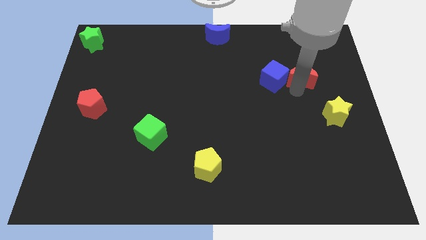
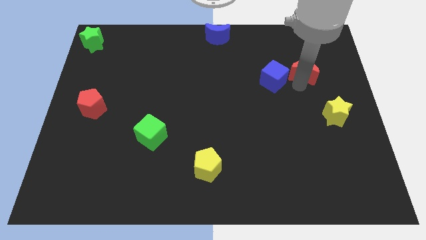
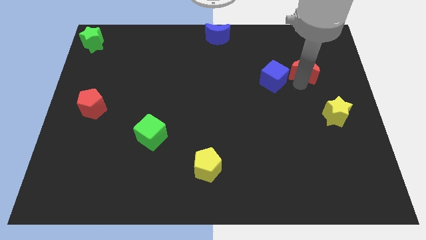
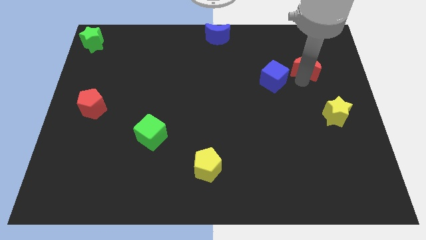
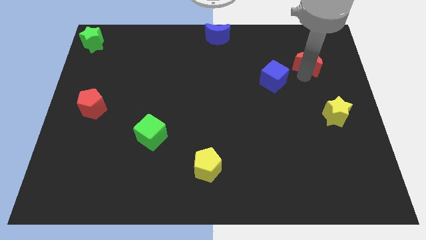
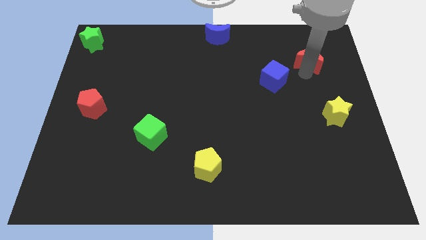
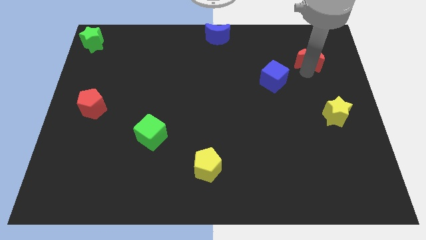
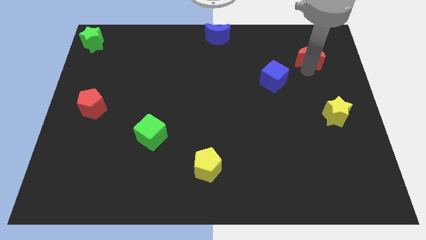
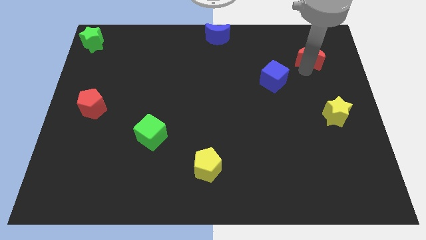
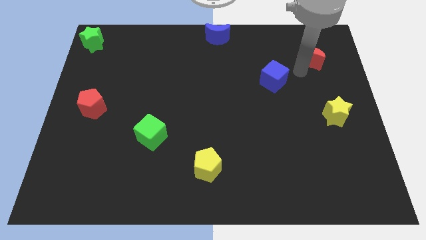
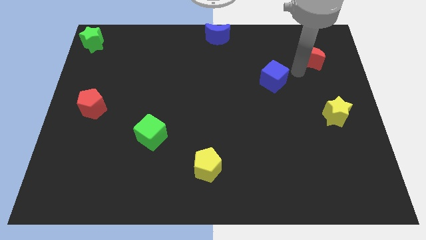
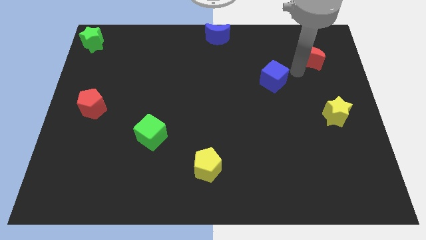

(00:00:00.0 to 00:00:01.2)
separate red moon from blue cube

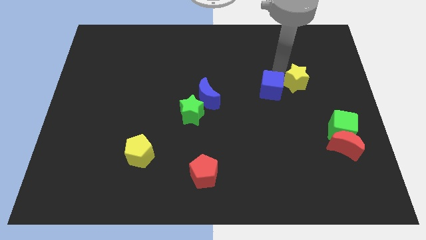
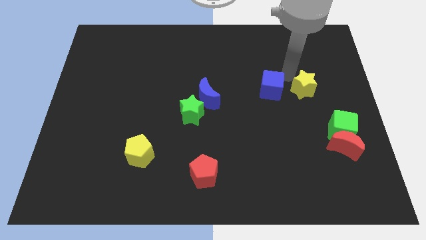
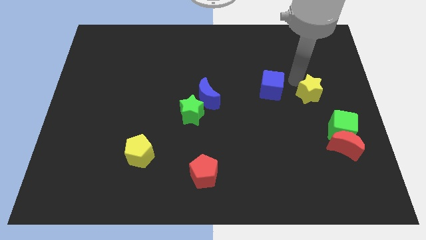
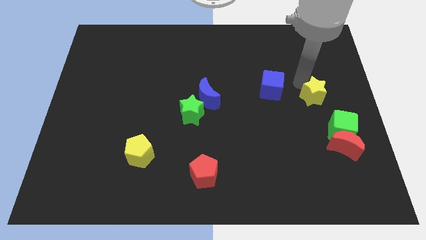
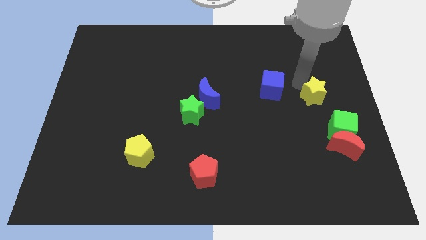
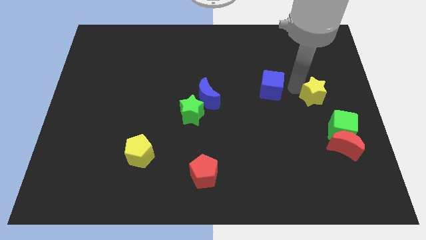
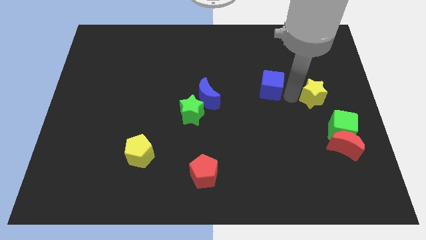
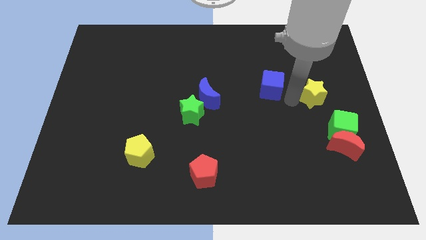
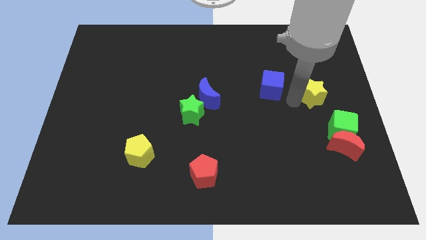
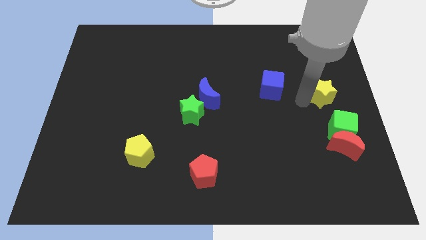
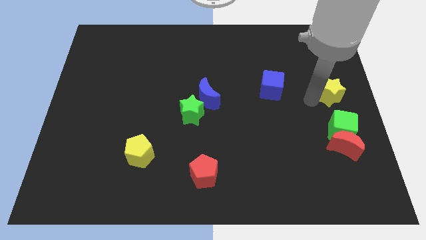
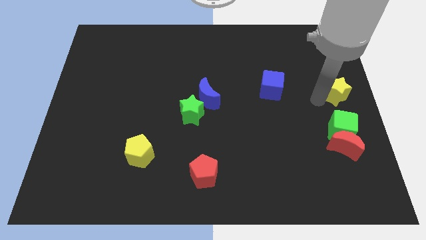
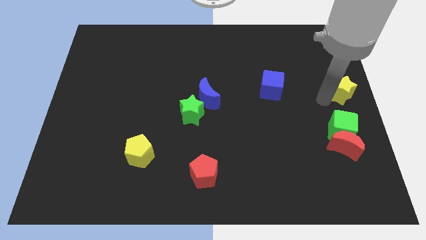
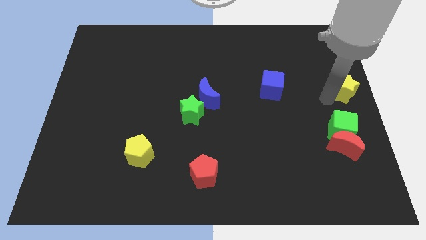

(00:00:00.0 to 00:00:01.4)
place the yellow star to the top of the green cube

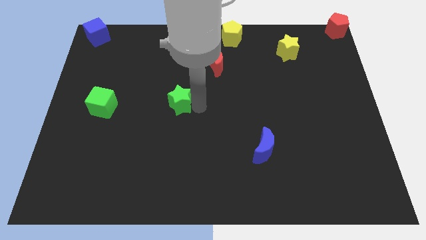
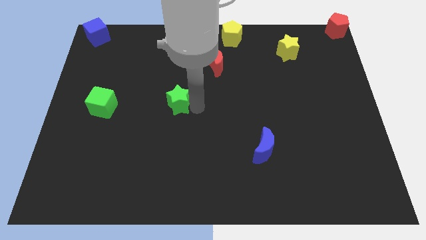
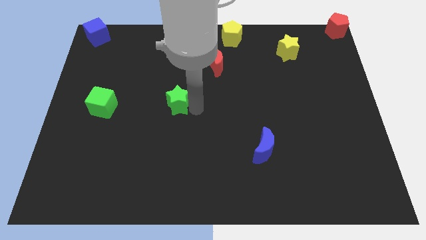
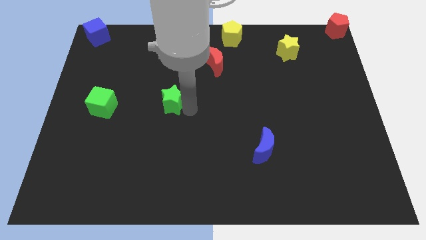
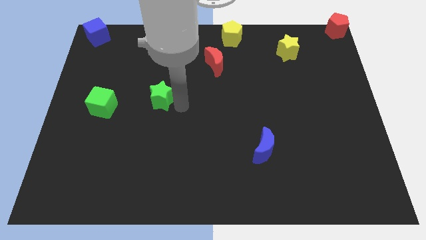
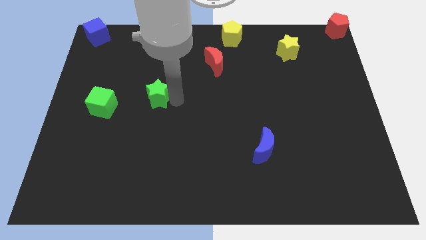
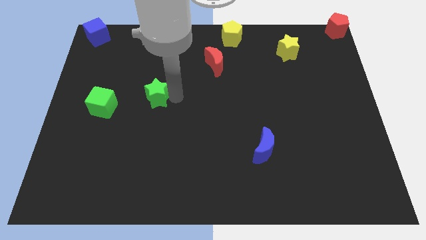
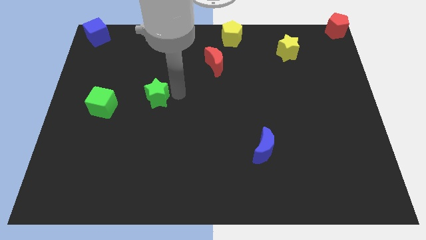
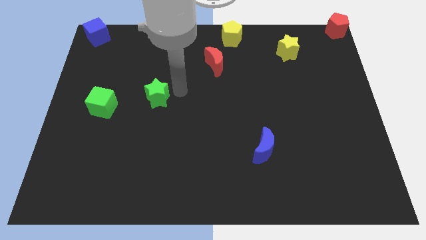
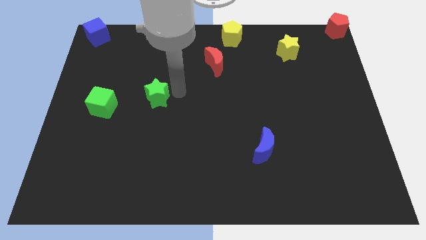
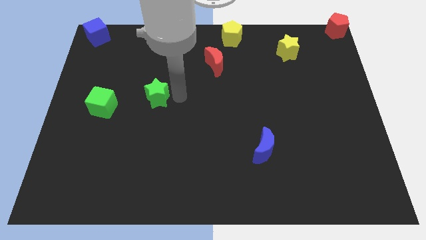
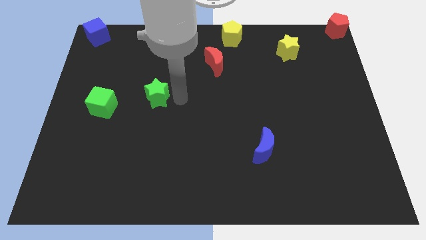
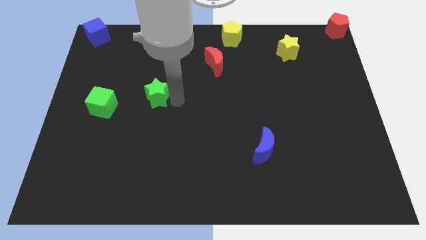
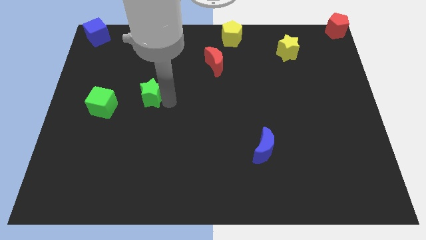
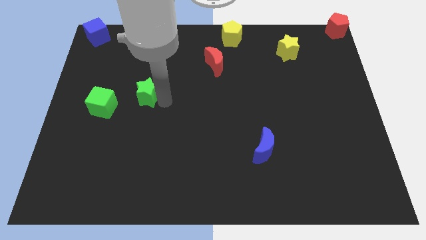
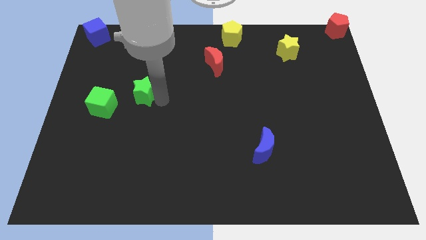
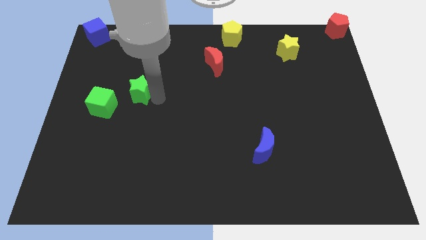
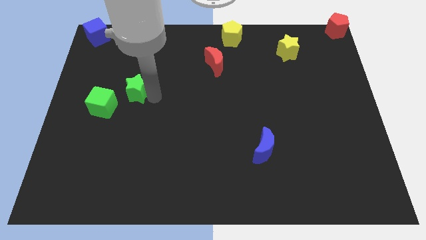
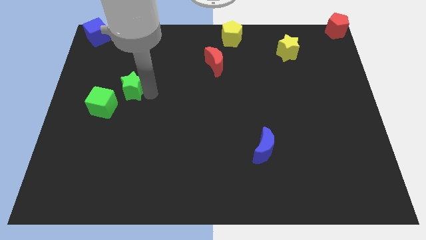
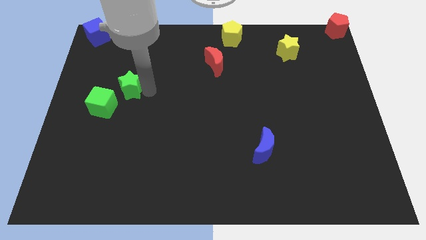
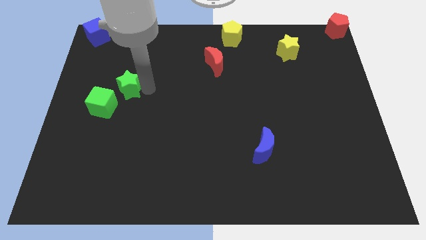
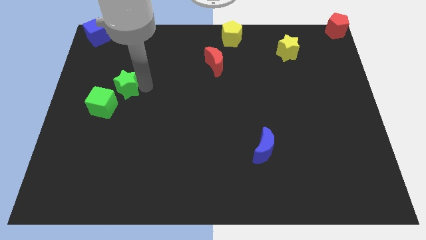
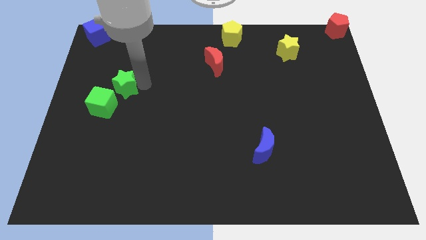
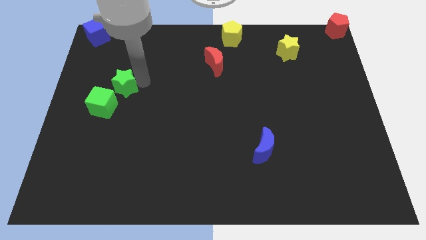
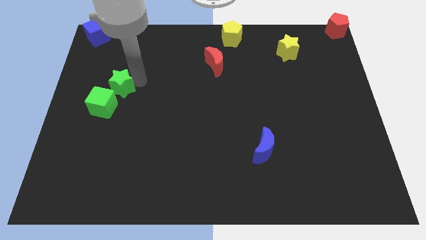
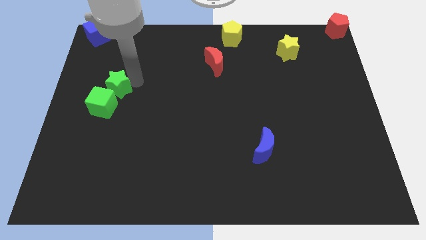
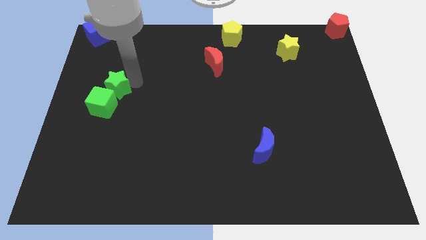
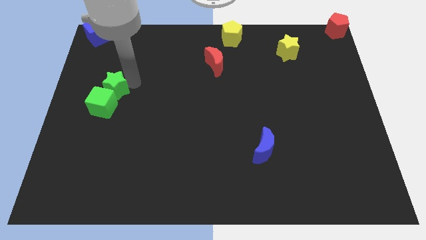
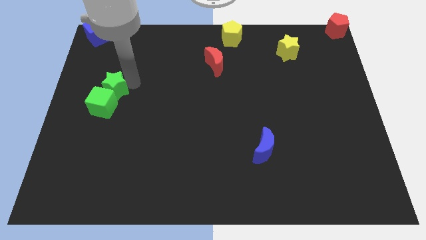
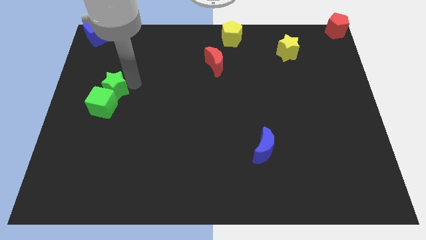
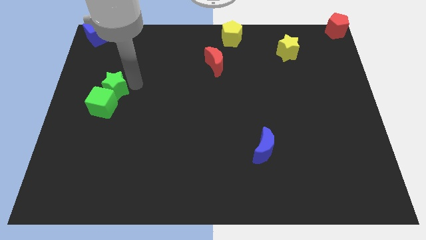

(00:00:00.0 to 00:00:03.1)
move the green star above the green cube

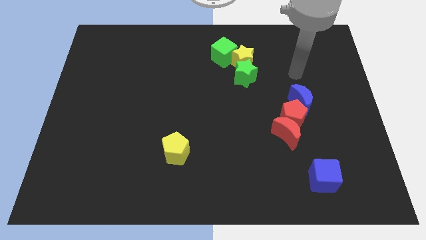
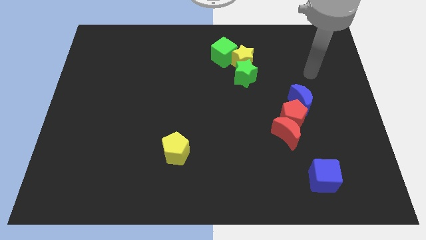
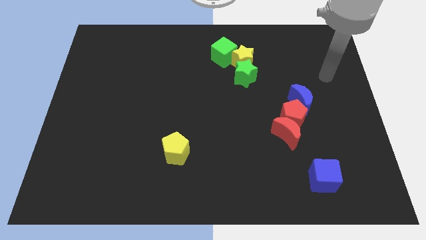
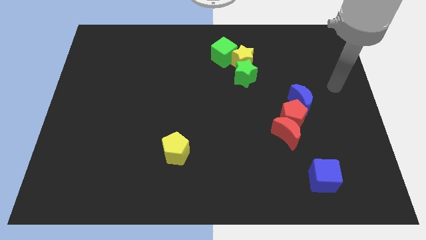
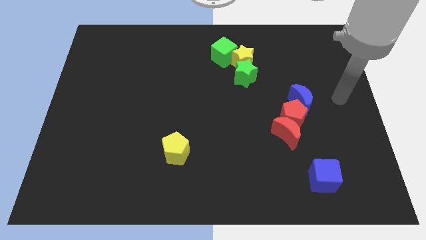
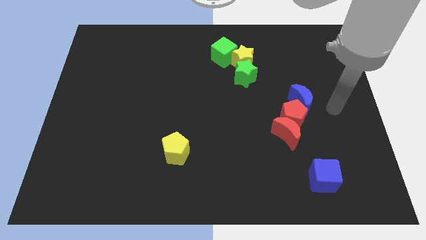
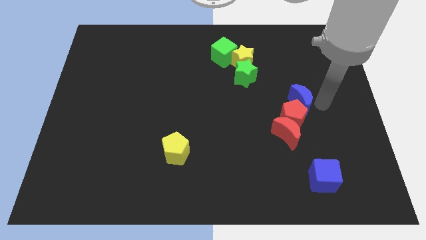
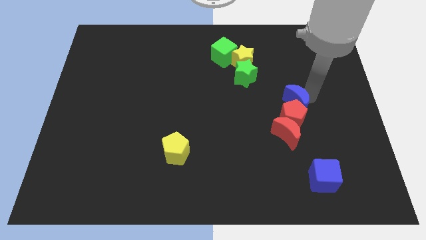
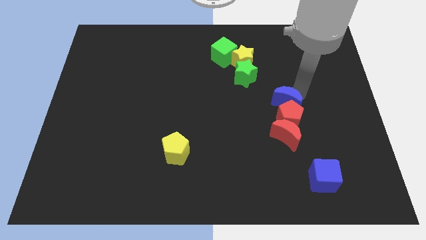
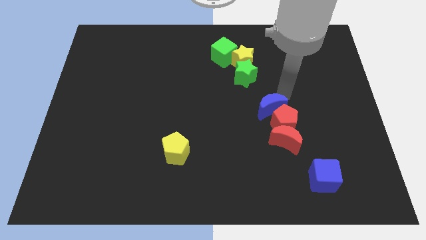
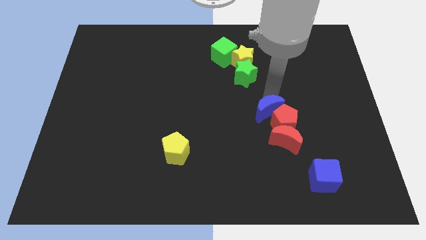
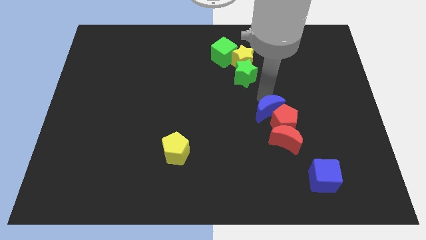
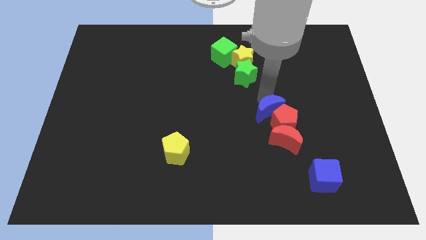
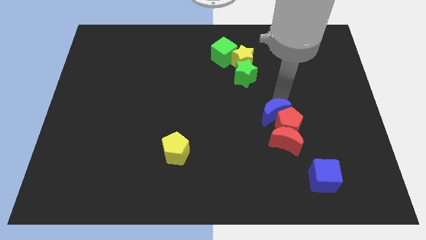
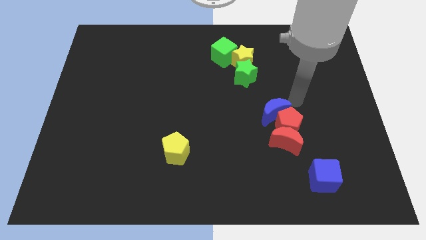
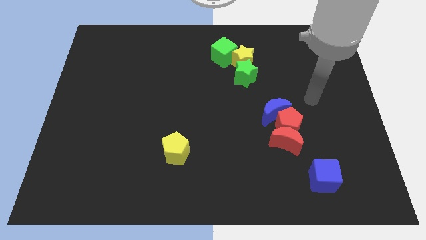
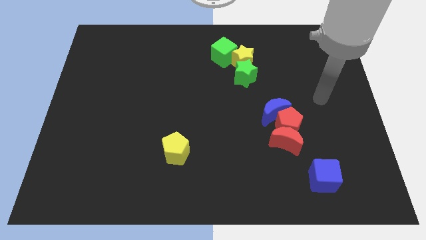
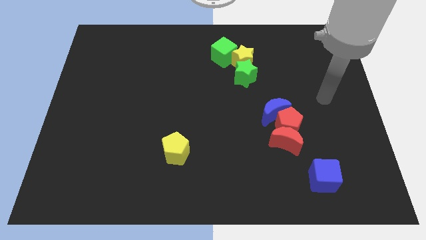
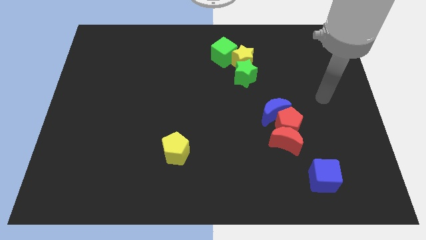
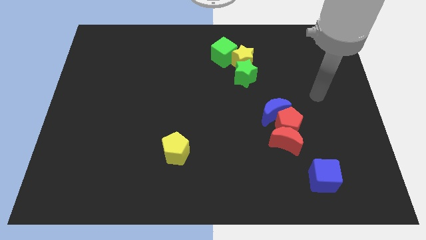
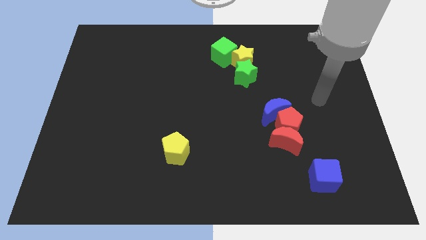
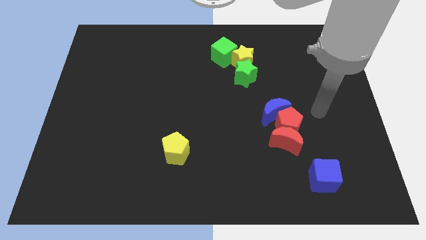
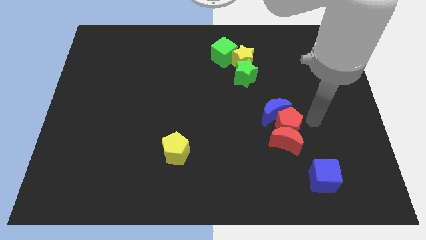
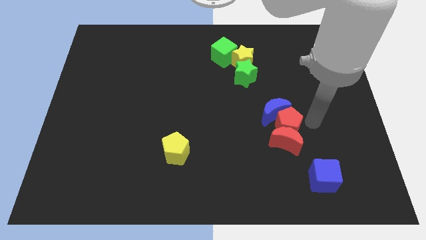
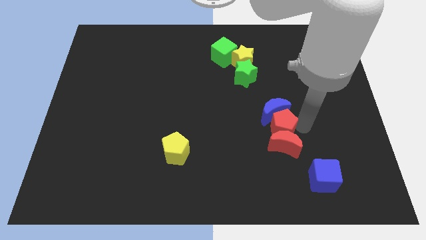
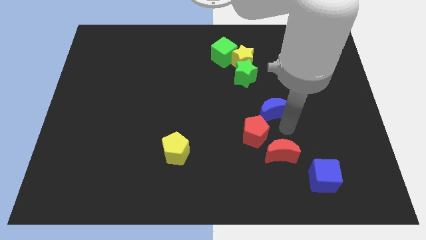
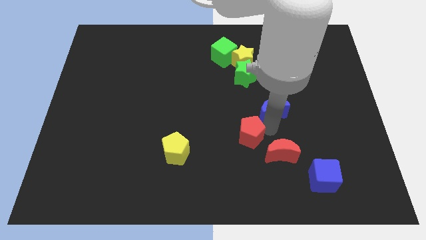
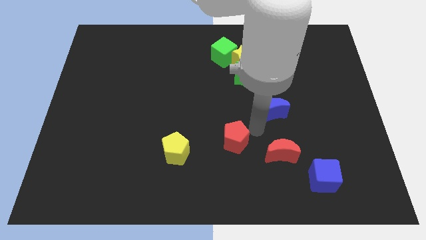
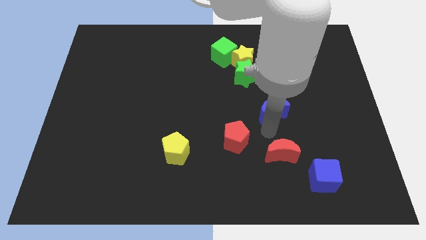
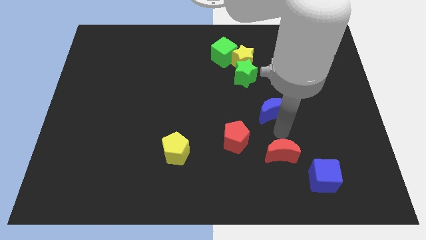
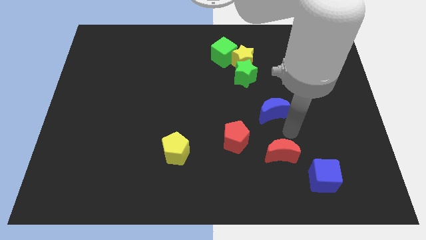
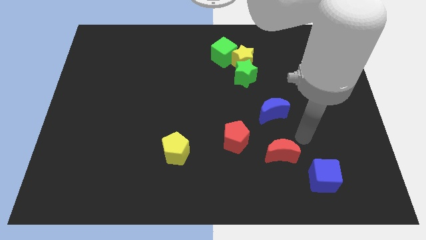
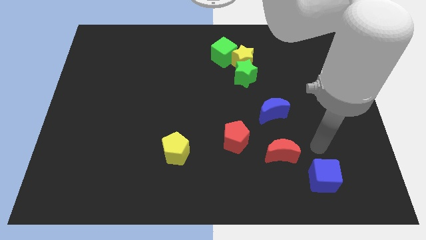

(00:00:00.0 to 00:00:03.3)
separate the red pentagon from the crescents
